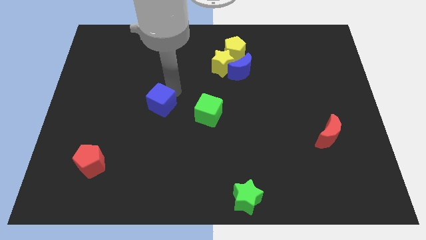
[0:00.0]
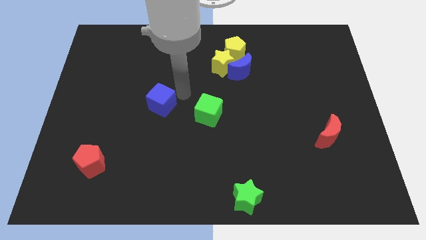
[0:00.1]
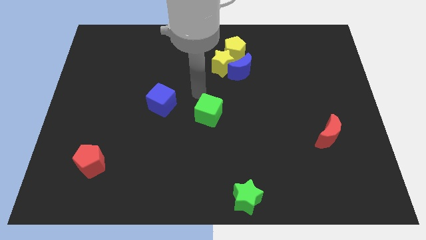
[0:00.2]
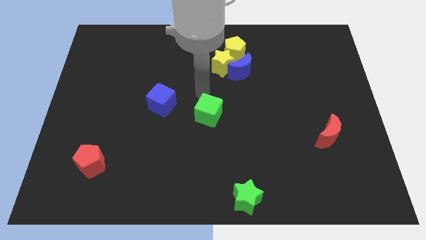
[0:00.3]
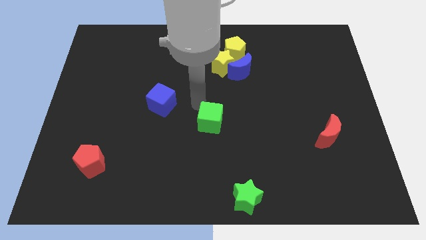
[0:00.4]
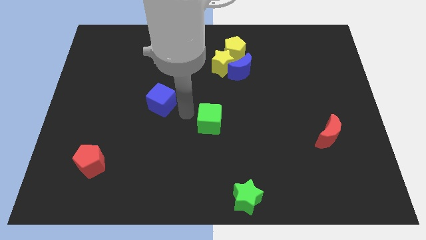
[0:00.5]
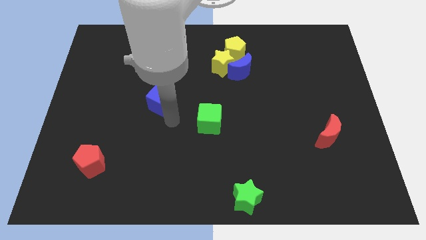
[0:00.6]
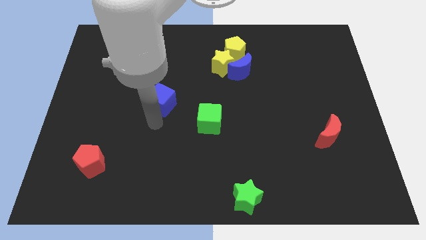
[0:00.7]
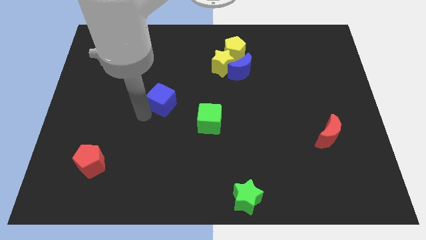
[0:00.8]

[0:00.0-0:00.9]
slightly push the green cube towards the bottom side of the board

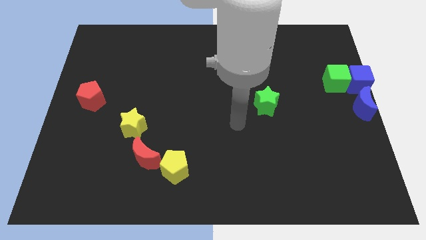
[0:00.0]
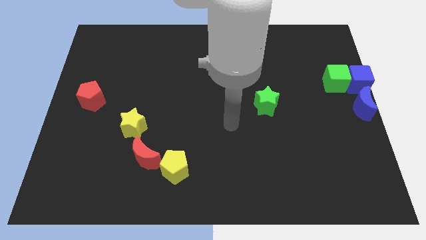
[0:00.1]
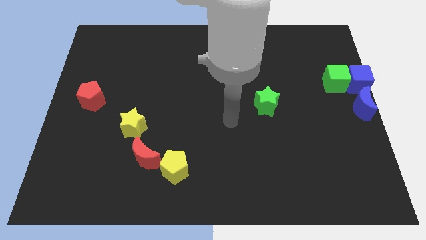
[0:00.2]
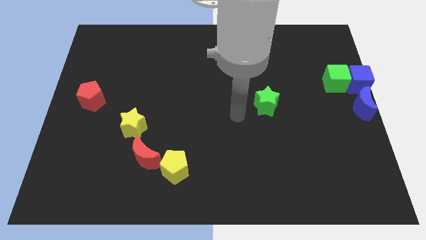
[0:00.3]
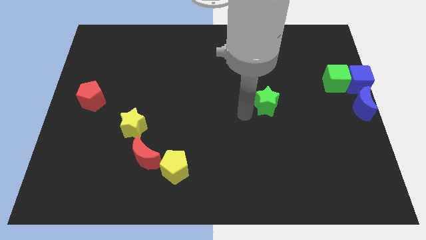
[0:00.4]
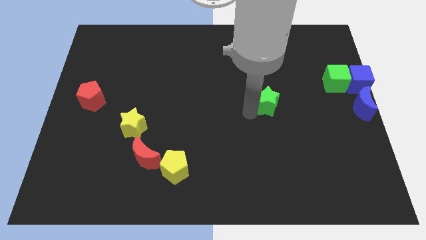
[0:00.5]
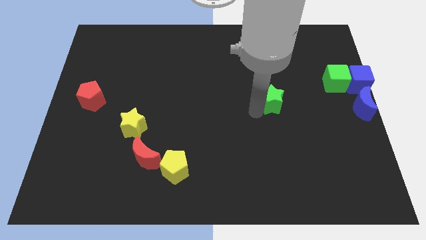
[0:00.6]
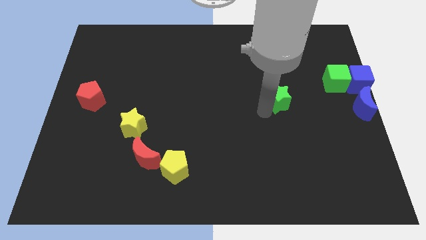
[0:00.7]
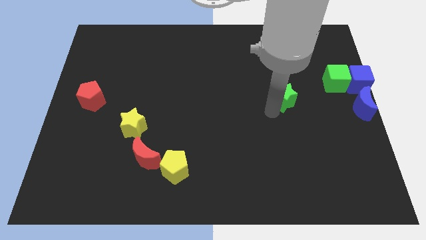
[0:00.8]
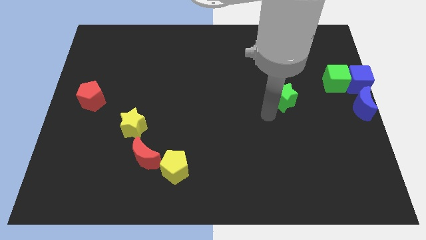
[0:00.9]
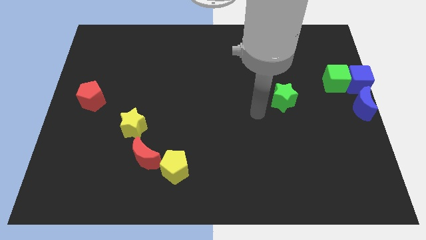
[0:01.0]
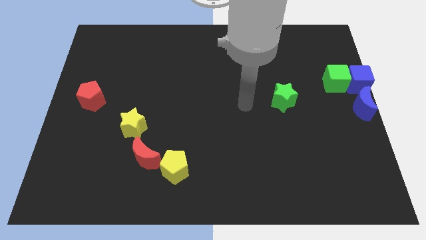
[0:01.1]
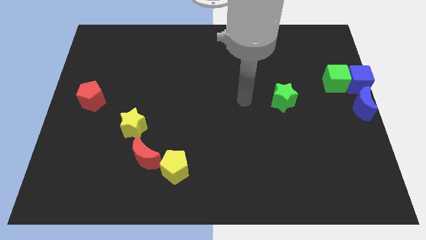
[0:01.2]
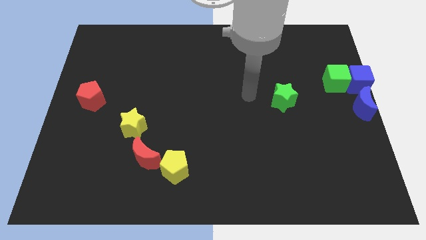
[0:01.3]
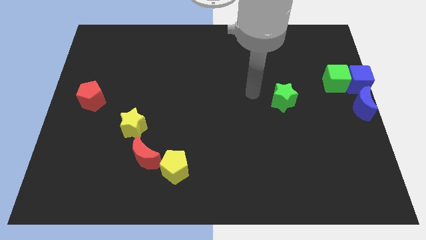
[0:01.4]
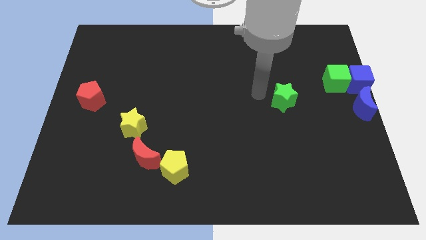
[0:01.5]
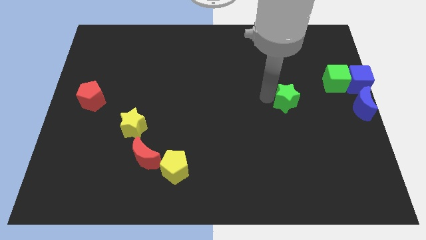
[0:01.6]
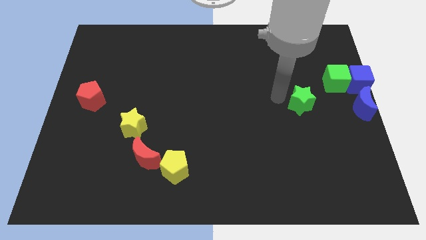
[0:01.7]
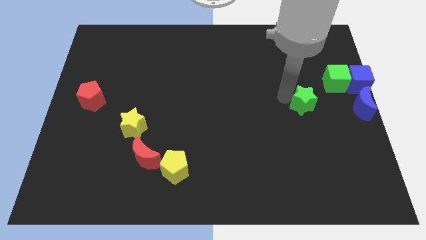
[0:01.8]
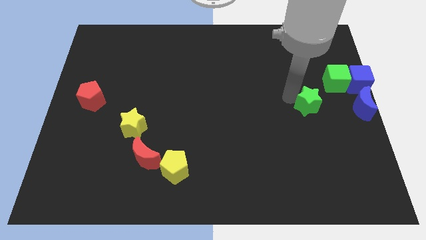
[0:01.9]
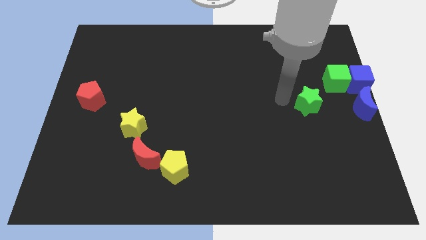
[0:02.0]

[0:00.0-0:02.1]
move the green star to the bottom left of the green cube

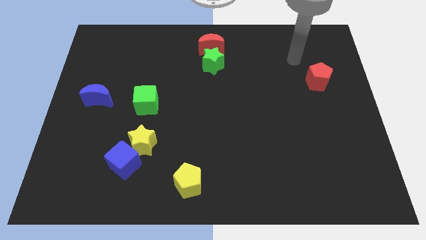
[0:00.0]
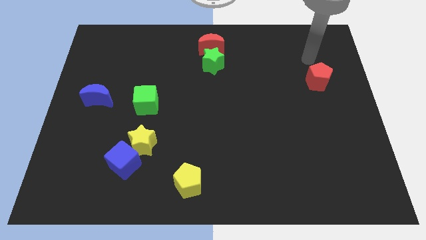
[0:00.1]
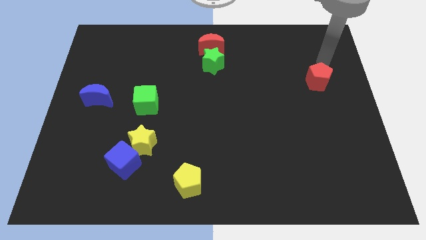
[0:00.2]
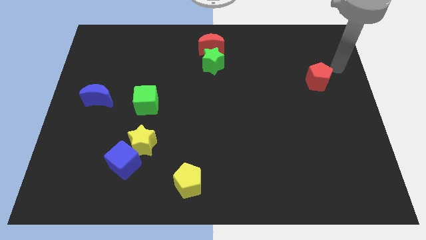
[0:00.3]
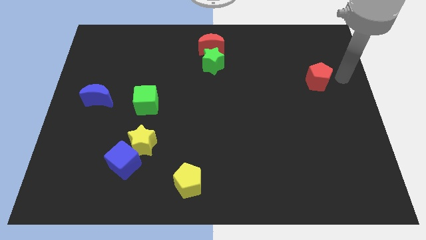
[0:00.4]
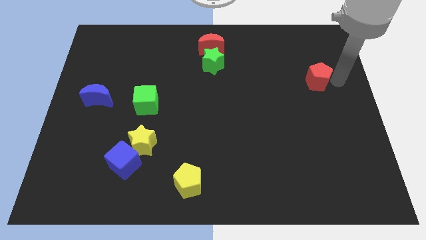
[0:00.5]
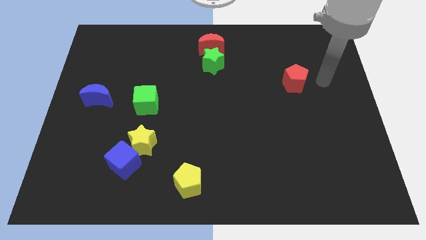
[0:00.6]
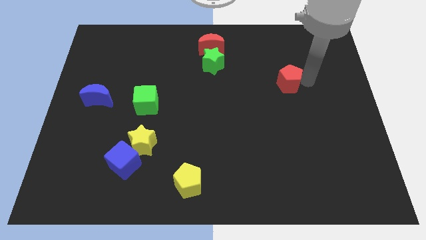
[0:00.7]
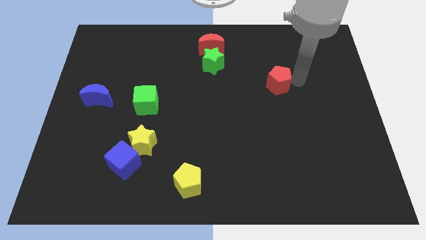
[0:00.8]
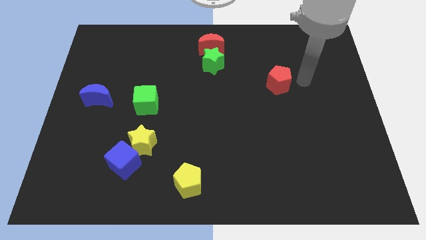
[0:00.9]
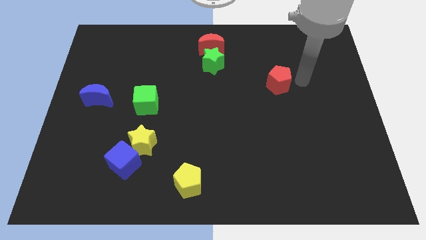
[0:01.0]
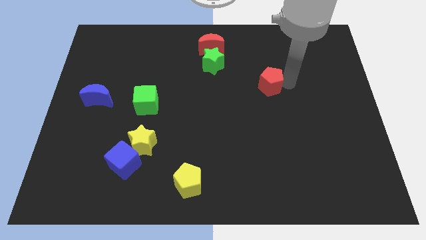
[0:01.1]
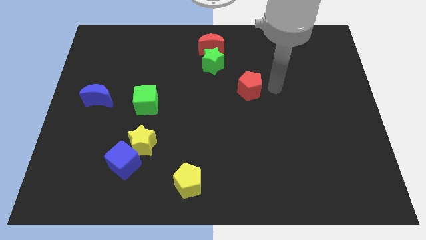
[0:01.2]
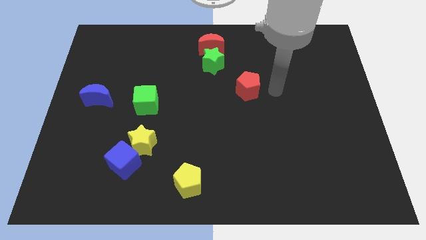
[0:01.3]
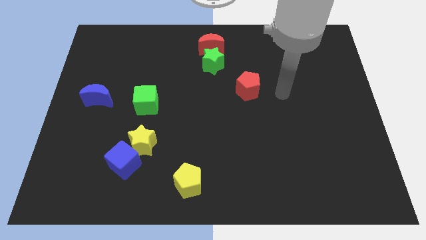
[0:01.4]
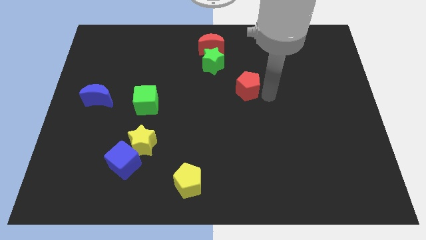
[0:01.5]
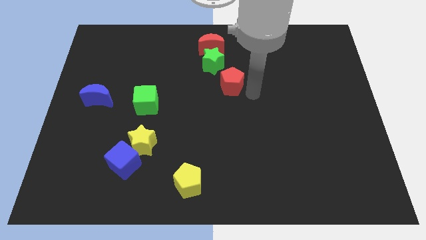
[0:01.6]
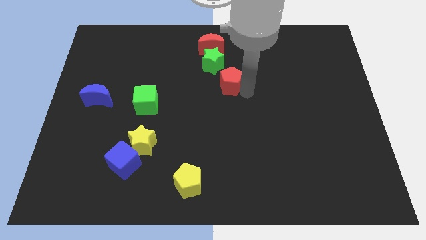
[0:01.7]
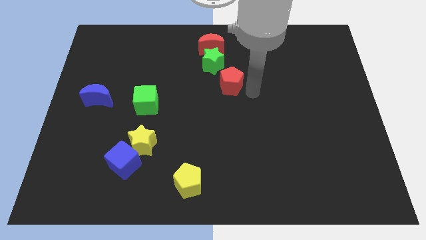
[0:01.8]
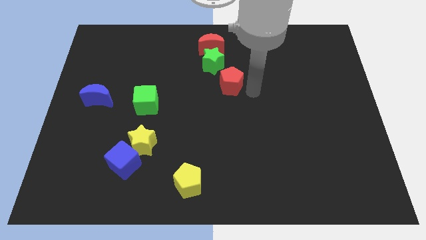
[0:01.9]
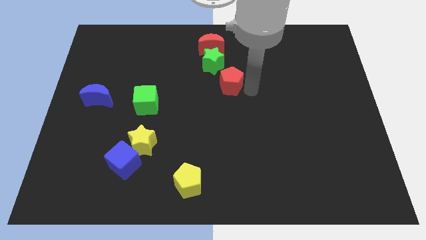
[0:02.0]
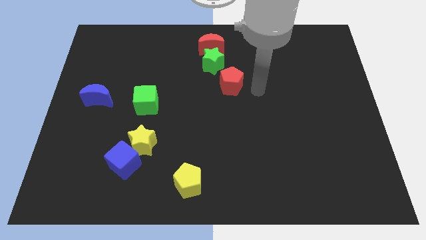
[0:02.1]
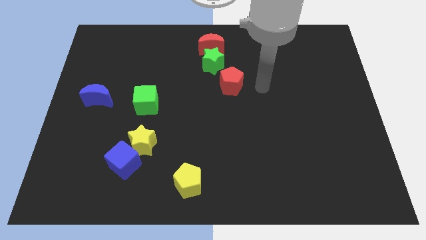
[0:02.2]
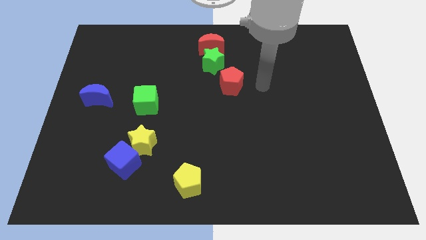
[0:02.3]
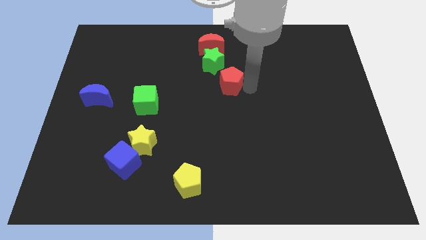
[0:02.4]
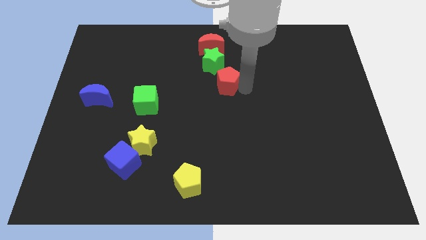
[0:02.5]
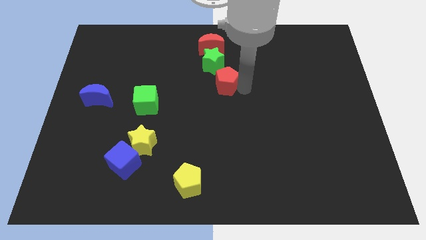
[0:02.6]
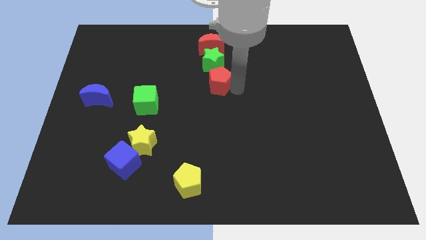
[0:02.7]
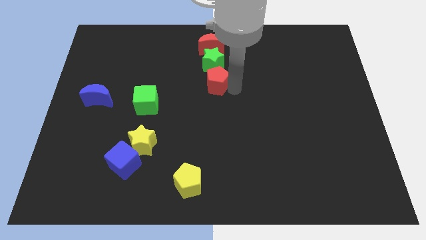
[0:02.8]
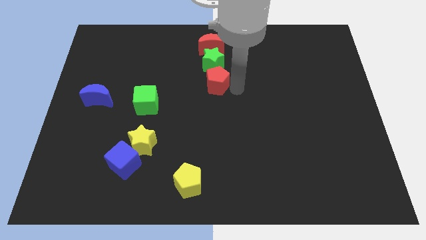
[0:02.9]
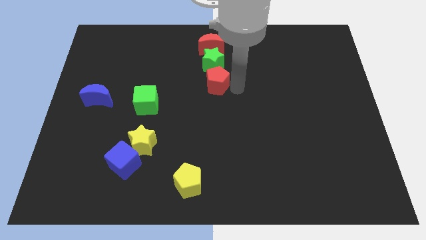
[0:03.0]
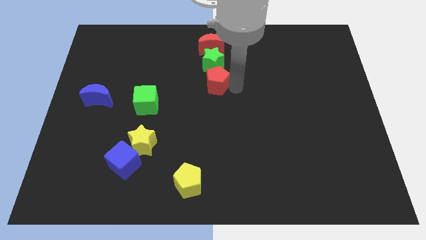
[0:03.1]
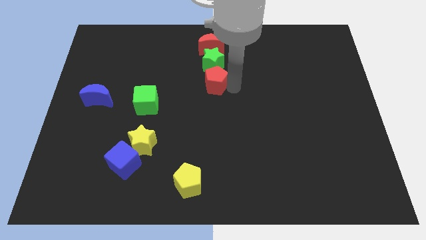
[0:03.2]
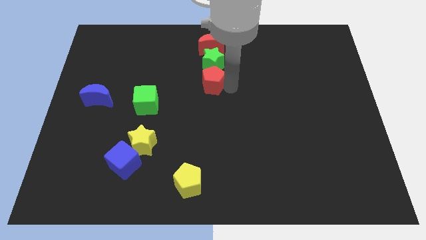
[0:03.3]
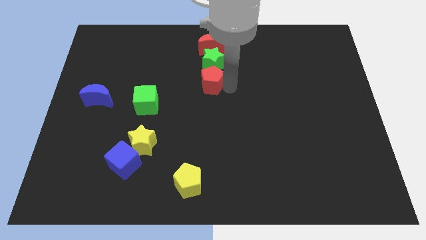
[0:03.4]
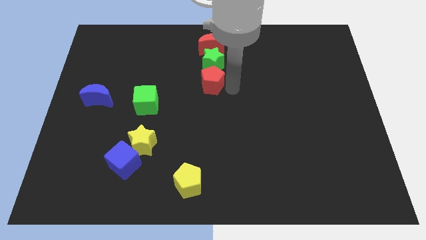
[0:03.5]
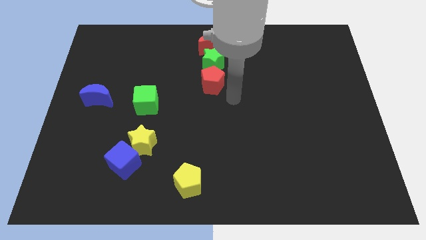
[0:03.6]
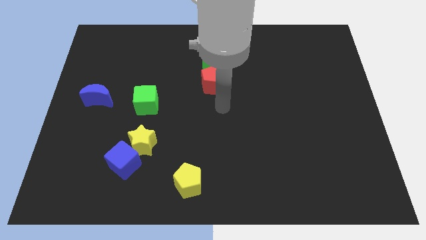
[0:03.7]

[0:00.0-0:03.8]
push the red pentagon to the bottom side of the green star

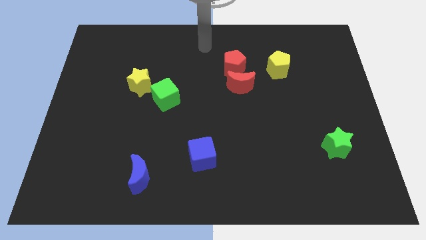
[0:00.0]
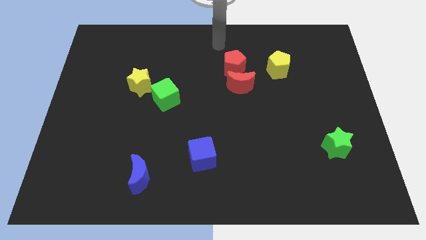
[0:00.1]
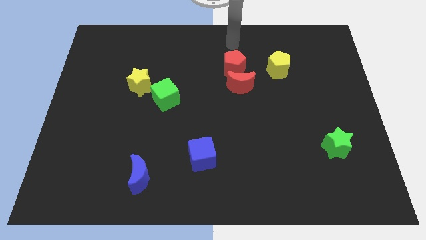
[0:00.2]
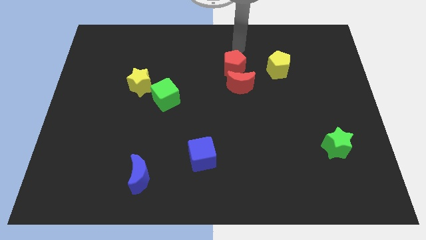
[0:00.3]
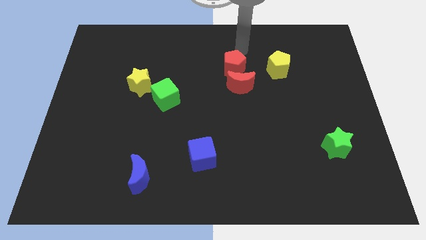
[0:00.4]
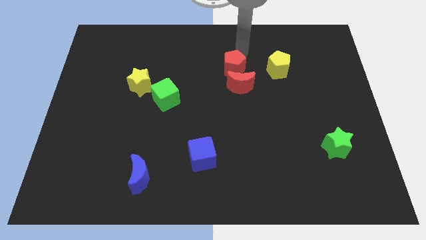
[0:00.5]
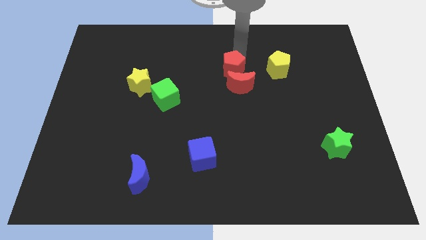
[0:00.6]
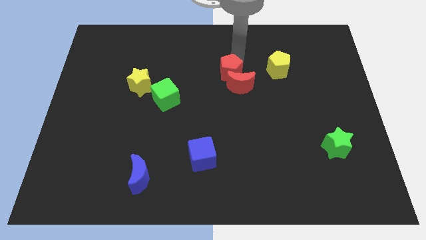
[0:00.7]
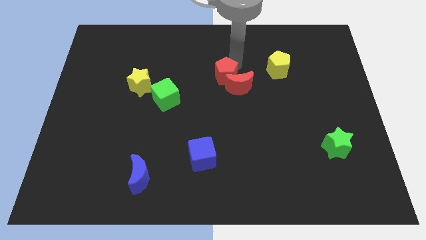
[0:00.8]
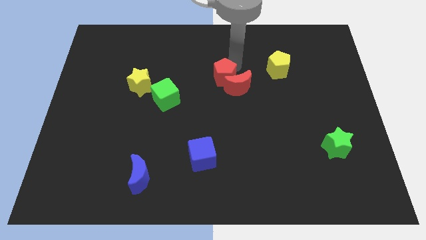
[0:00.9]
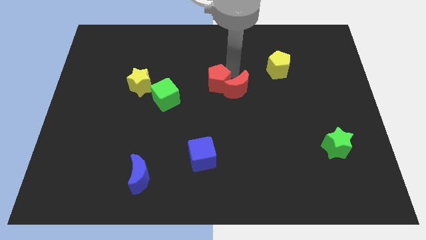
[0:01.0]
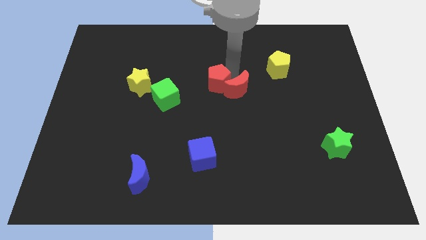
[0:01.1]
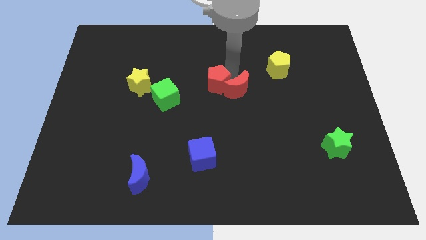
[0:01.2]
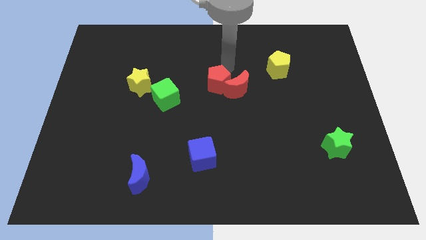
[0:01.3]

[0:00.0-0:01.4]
push the red pentagon slightly towards the bottom along with the red crescent

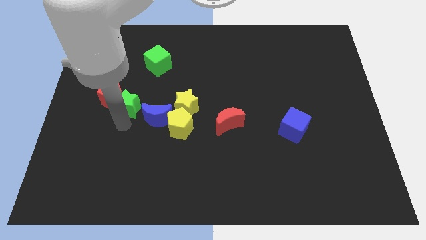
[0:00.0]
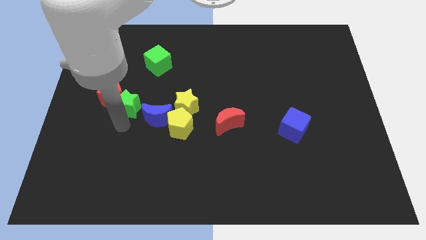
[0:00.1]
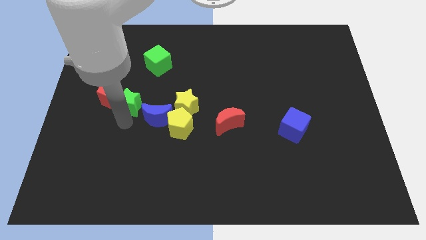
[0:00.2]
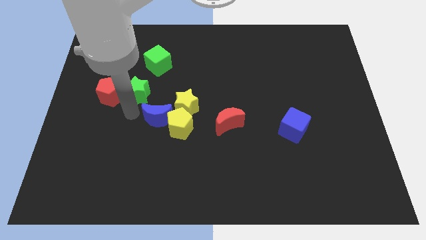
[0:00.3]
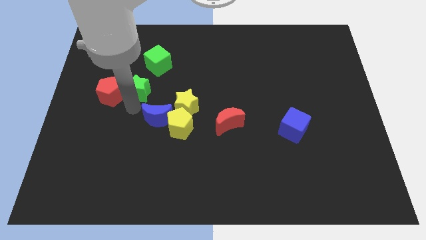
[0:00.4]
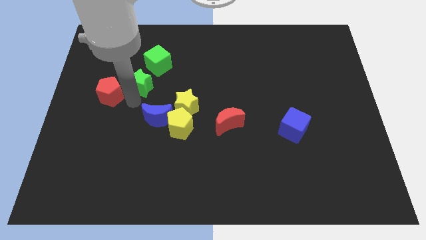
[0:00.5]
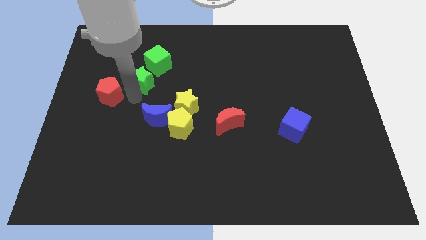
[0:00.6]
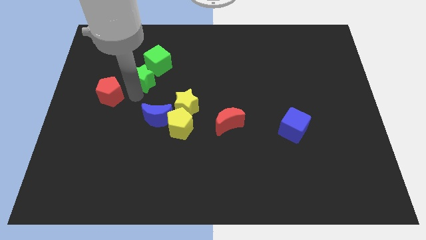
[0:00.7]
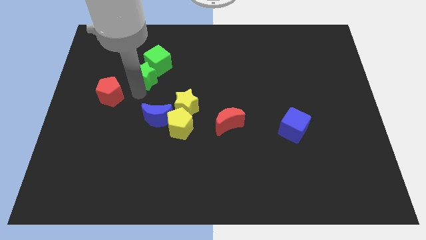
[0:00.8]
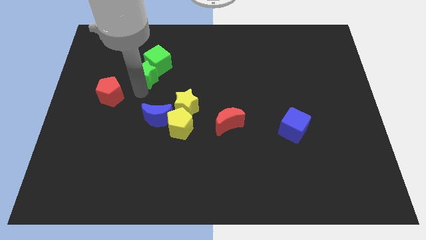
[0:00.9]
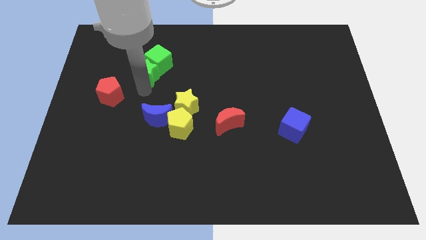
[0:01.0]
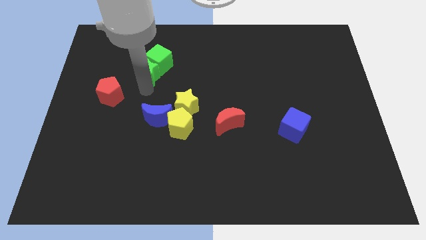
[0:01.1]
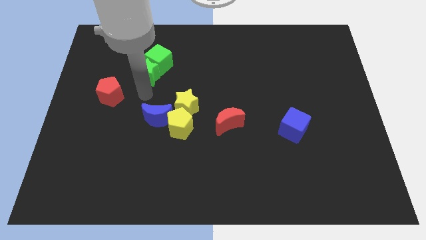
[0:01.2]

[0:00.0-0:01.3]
push green star into the green cube
